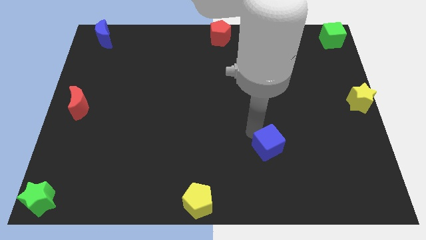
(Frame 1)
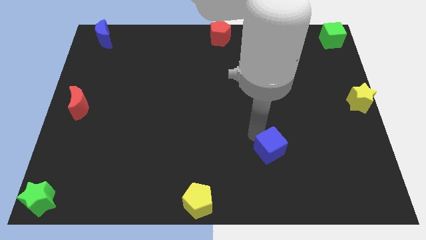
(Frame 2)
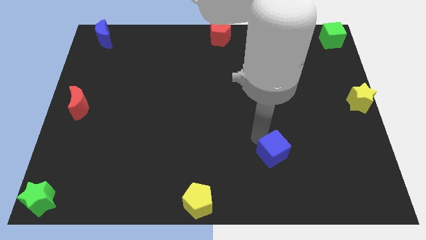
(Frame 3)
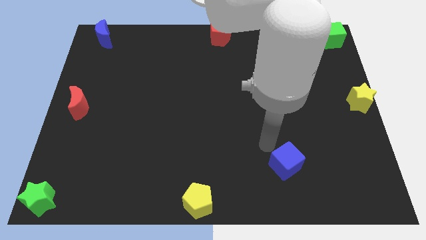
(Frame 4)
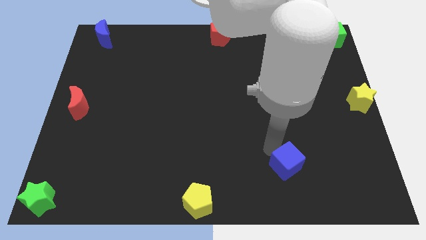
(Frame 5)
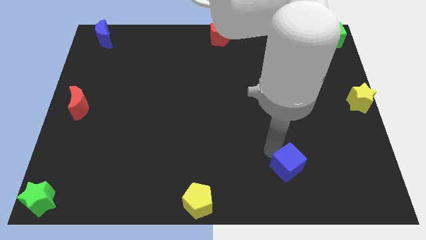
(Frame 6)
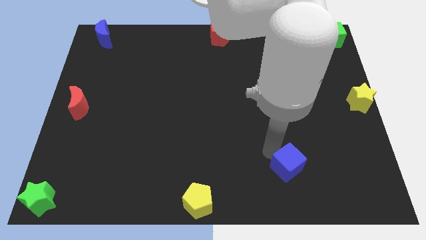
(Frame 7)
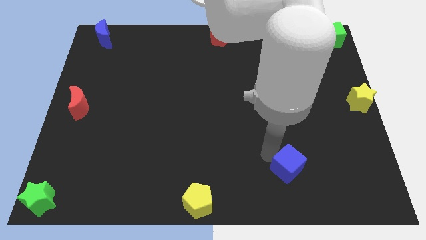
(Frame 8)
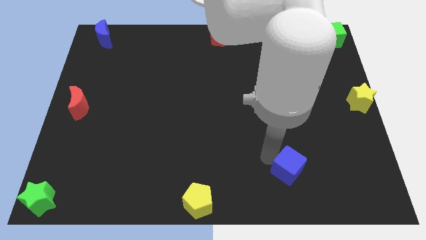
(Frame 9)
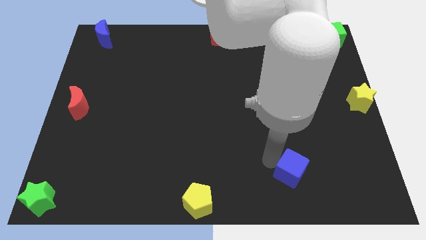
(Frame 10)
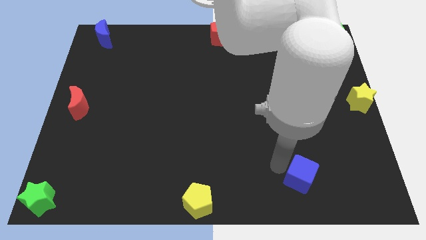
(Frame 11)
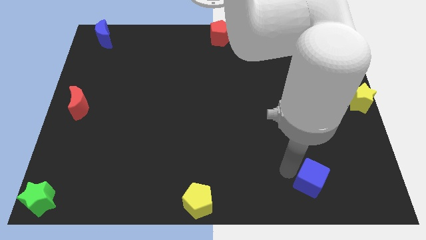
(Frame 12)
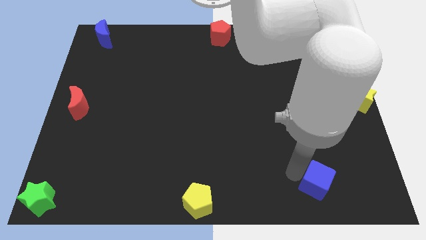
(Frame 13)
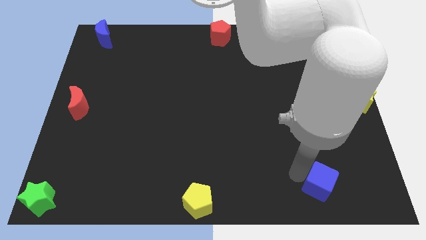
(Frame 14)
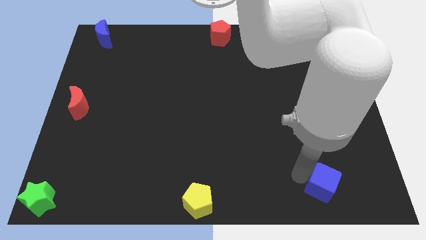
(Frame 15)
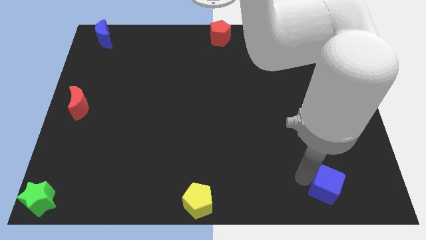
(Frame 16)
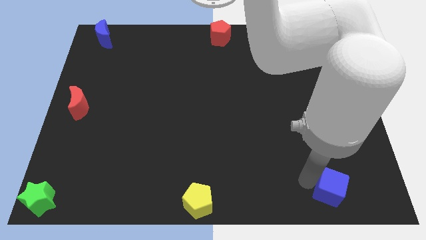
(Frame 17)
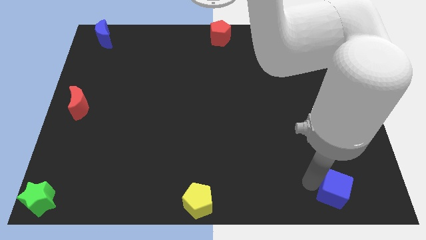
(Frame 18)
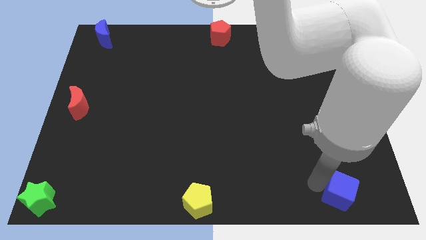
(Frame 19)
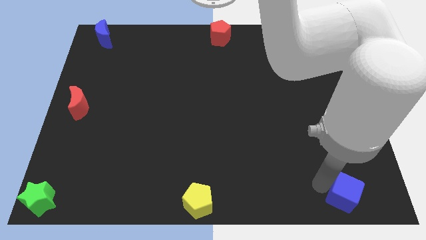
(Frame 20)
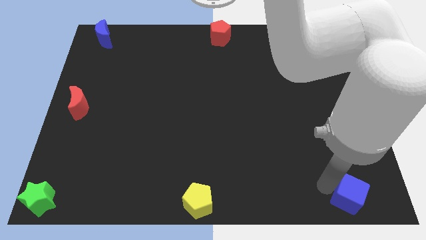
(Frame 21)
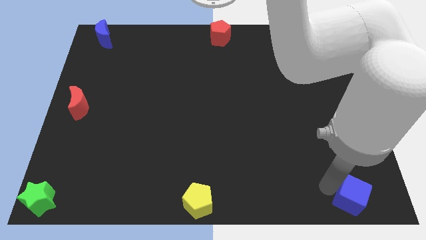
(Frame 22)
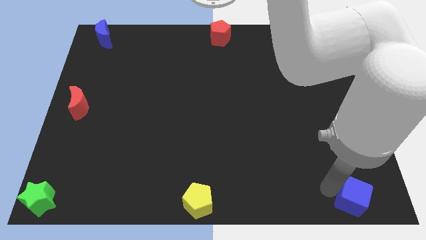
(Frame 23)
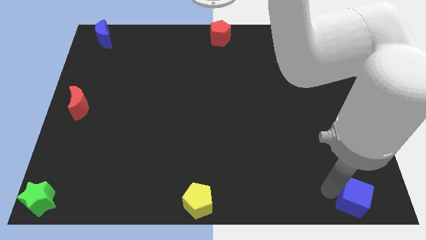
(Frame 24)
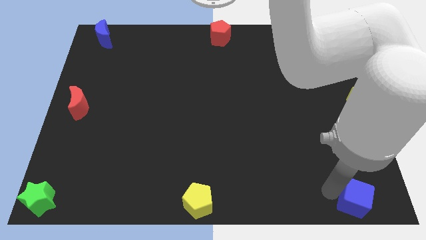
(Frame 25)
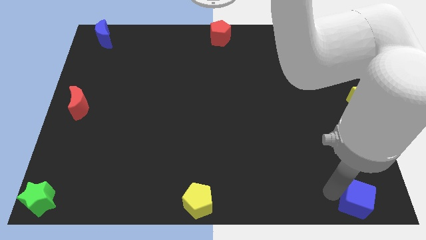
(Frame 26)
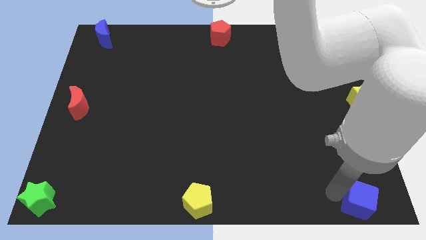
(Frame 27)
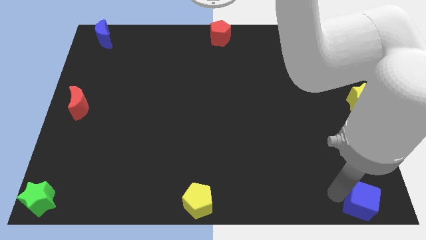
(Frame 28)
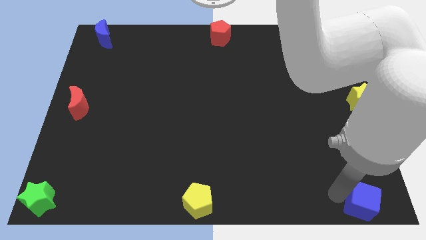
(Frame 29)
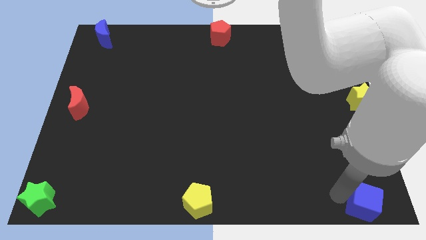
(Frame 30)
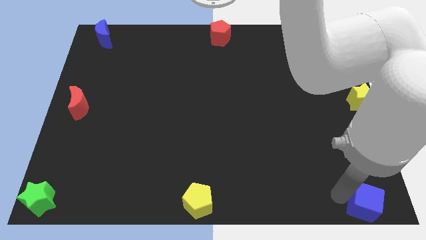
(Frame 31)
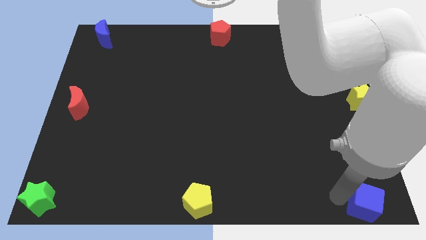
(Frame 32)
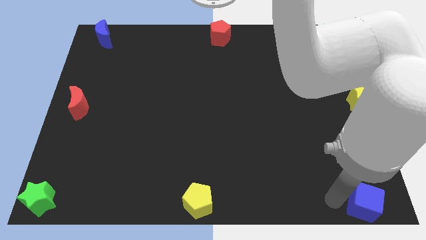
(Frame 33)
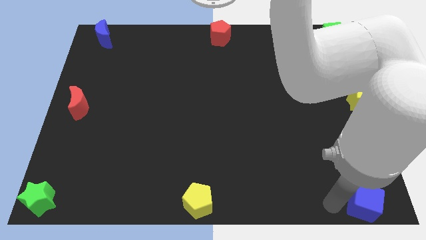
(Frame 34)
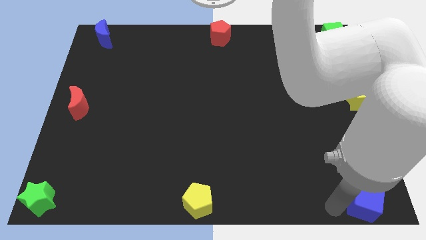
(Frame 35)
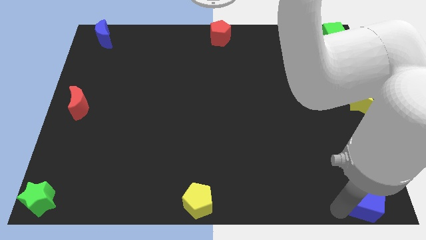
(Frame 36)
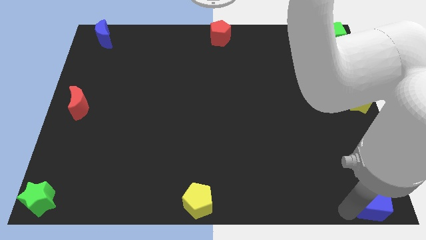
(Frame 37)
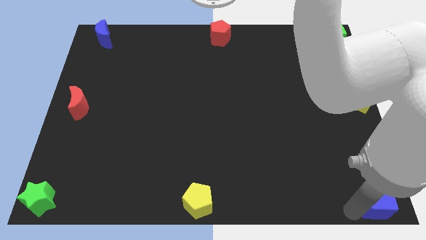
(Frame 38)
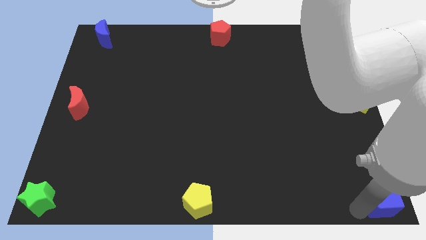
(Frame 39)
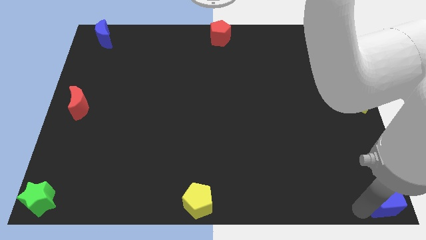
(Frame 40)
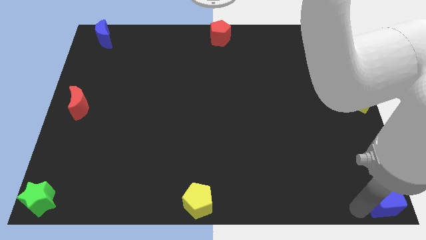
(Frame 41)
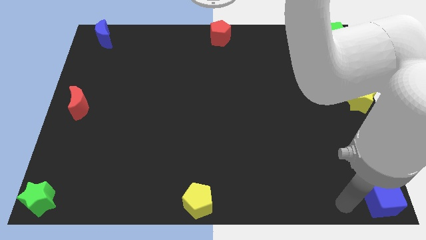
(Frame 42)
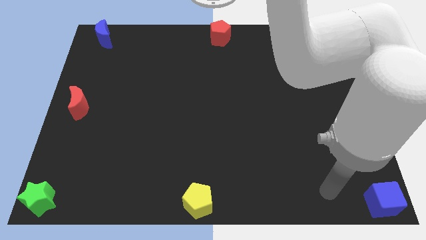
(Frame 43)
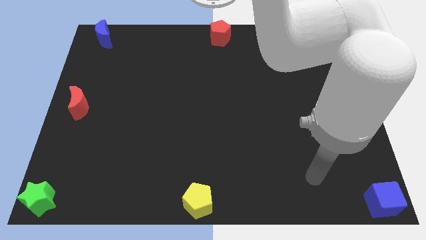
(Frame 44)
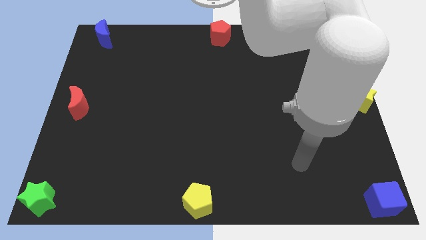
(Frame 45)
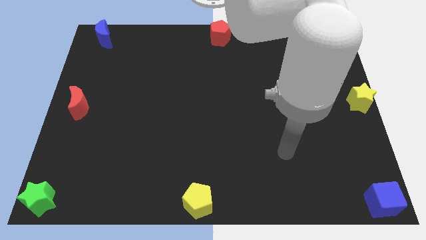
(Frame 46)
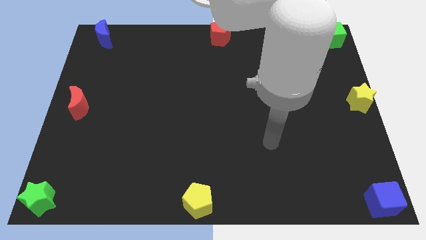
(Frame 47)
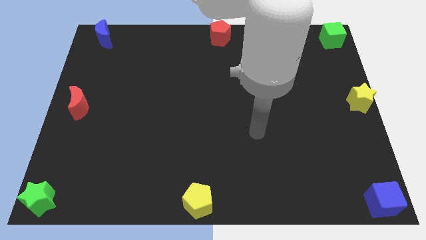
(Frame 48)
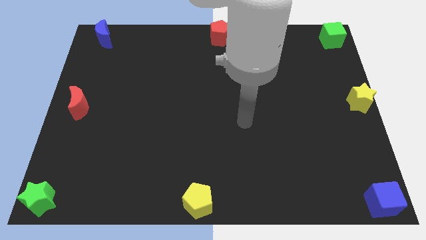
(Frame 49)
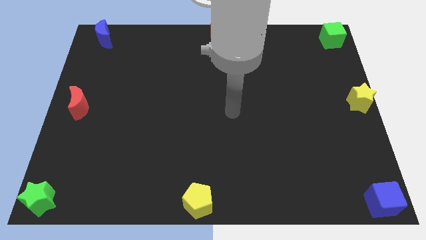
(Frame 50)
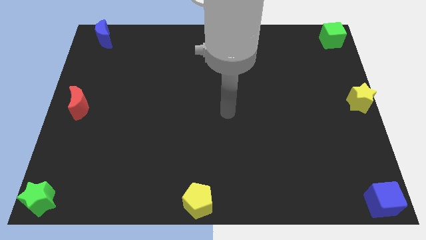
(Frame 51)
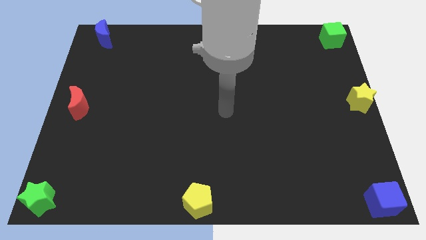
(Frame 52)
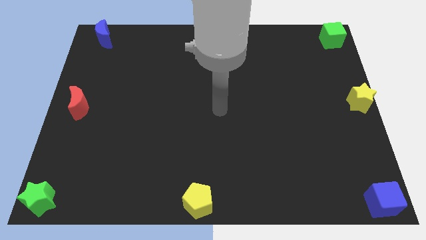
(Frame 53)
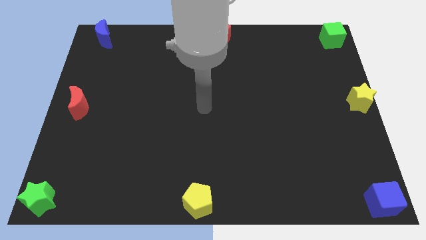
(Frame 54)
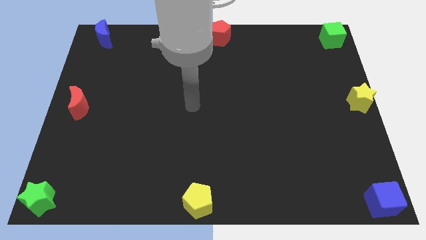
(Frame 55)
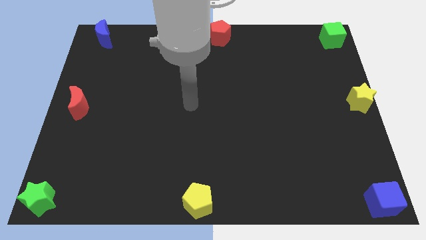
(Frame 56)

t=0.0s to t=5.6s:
place the blue cube to the bottom right of the board

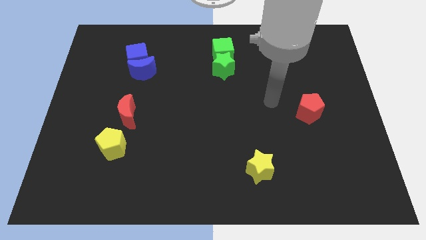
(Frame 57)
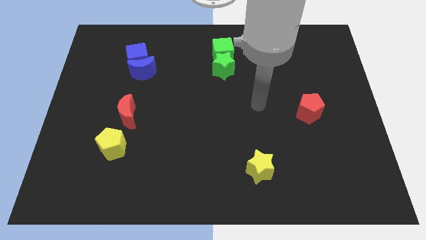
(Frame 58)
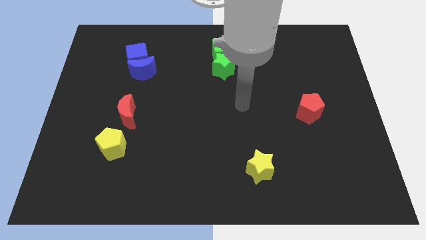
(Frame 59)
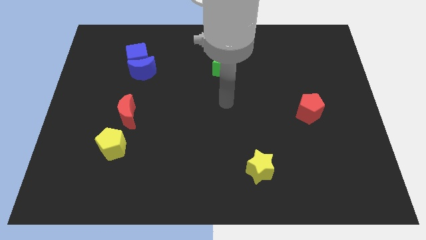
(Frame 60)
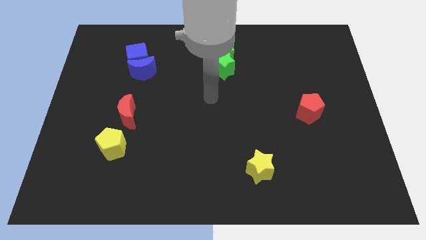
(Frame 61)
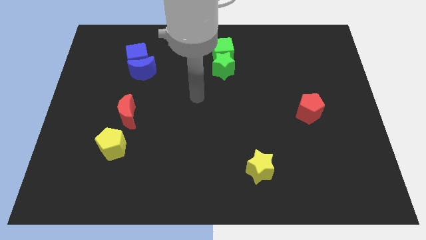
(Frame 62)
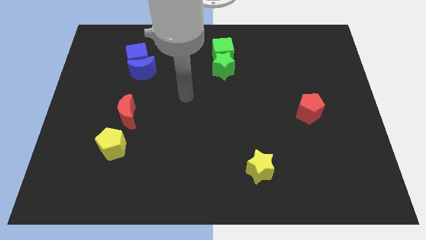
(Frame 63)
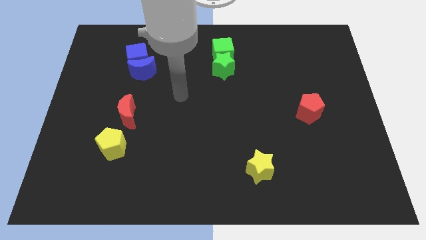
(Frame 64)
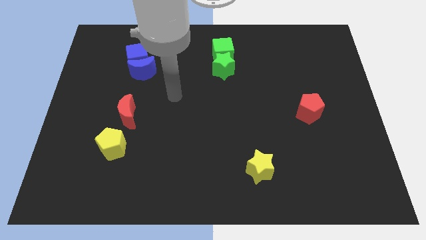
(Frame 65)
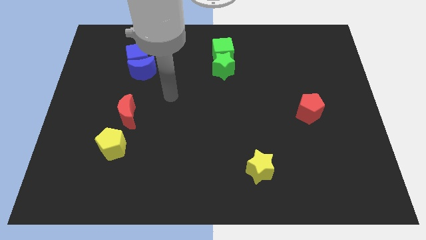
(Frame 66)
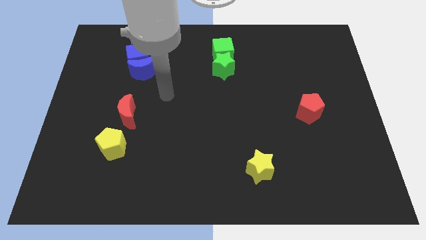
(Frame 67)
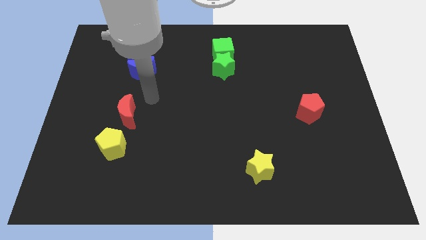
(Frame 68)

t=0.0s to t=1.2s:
slide your hand to the top right of the red crescent

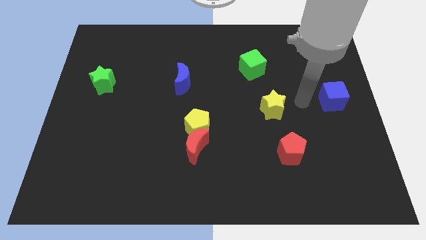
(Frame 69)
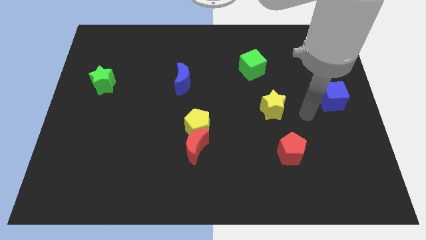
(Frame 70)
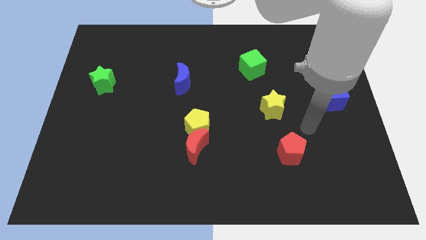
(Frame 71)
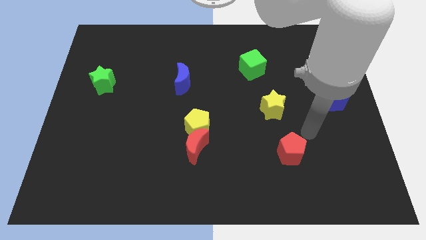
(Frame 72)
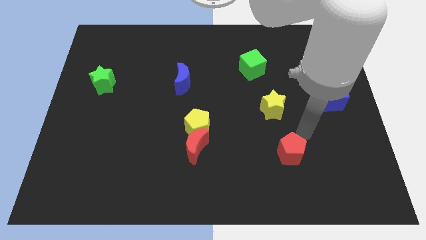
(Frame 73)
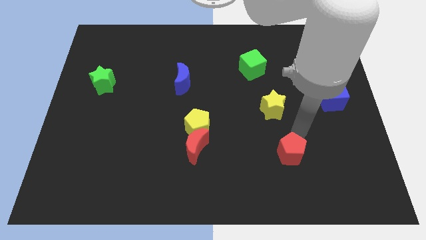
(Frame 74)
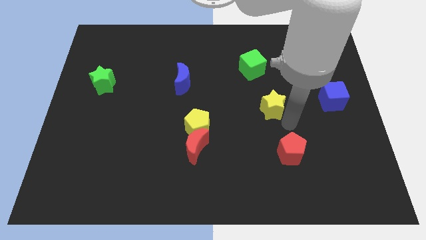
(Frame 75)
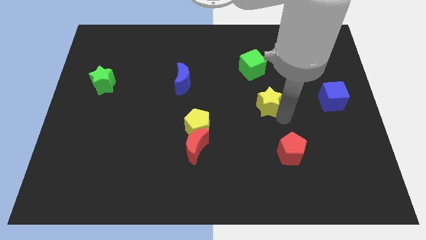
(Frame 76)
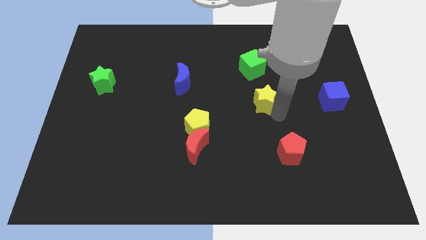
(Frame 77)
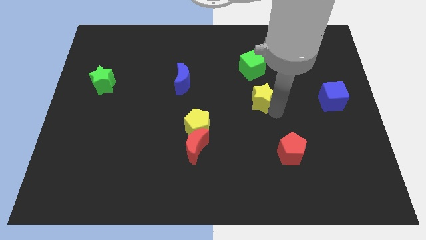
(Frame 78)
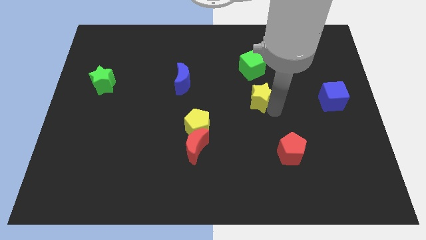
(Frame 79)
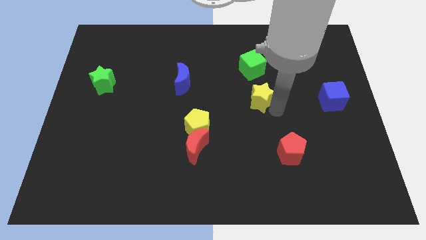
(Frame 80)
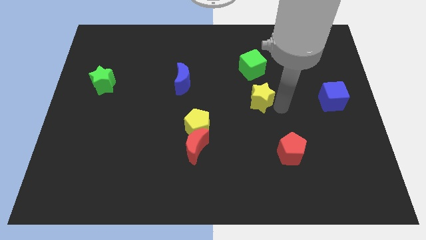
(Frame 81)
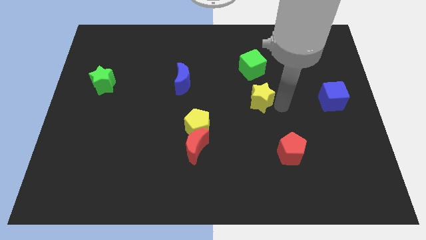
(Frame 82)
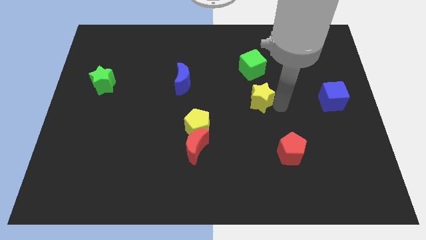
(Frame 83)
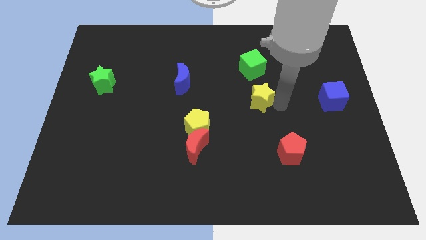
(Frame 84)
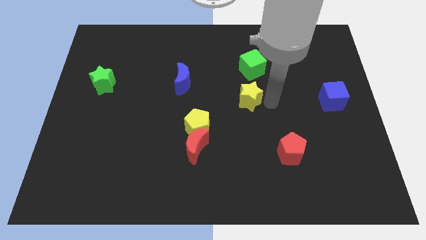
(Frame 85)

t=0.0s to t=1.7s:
put the yellow star below the green cube

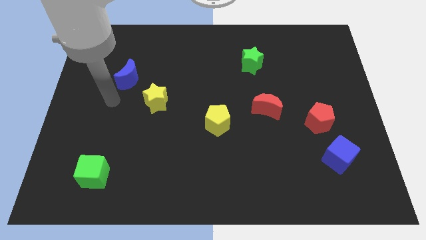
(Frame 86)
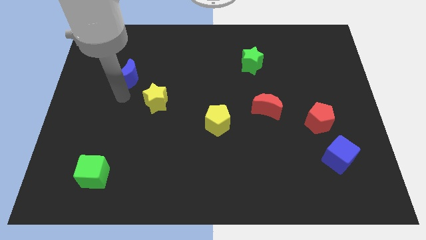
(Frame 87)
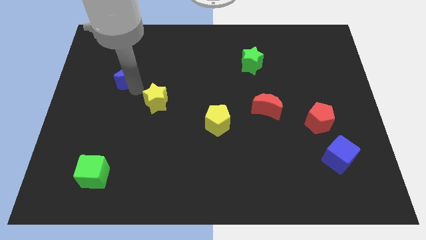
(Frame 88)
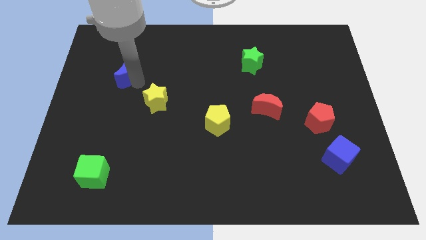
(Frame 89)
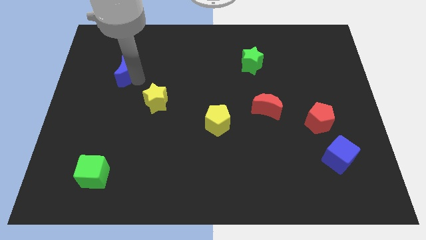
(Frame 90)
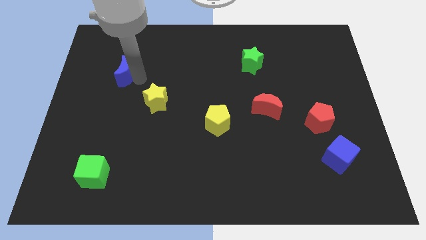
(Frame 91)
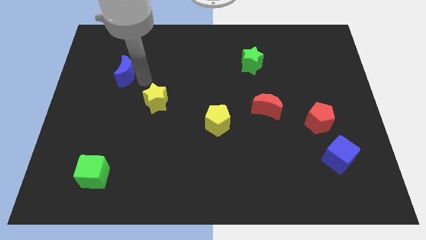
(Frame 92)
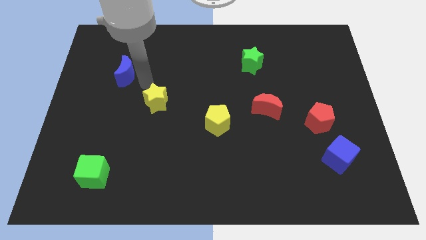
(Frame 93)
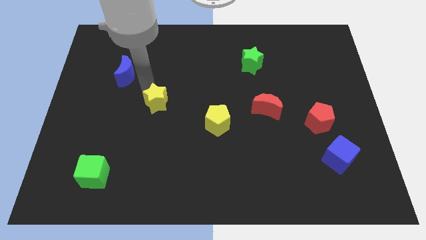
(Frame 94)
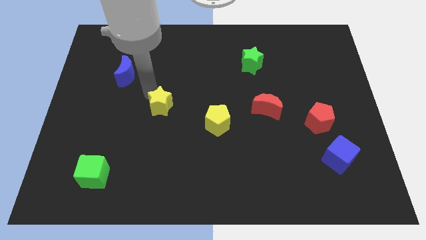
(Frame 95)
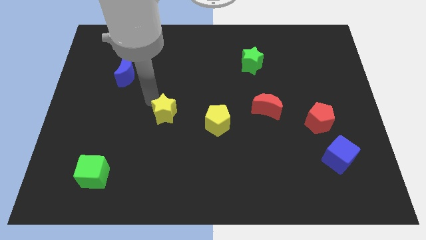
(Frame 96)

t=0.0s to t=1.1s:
place yellow star to the left of yellow pentagon
